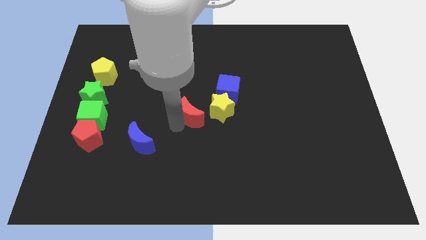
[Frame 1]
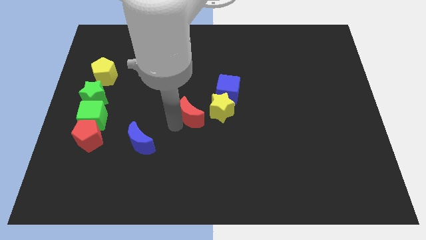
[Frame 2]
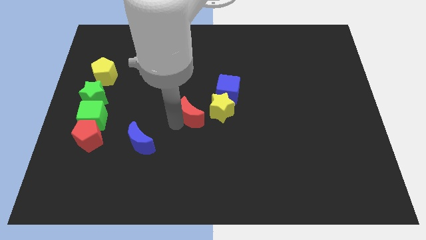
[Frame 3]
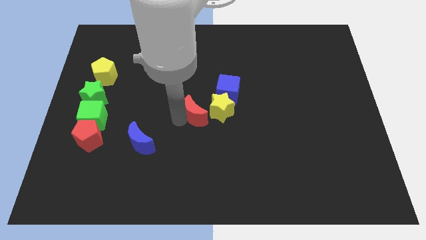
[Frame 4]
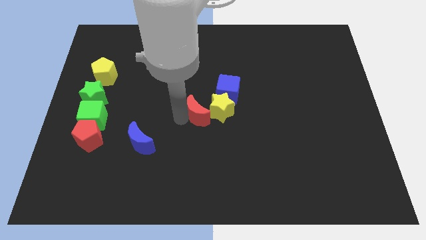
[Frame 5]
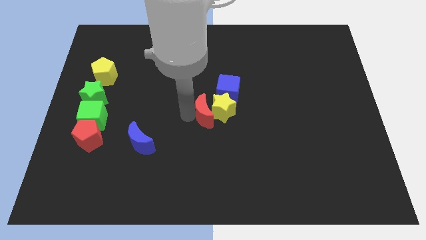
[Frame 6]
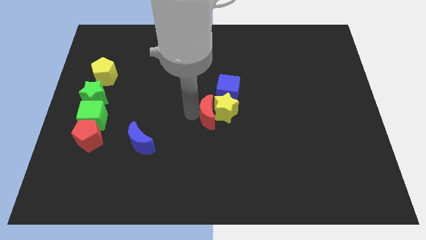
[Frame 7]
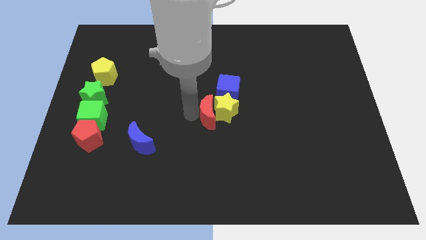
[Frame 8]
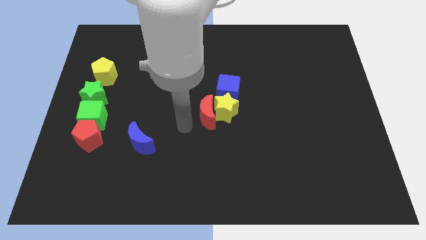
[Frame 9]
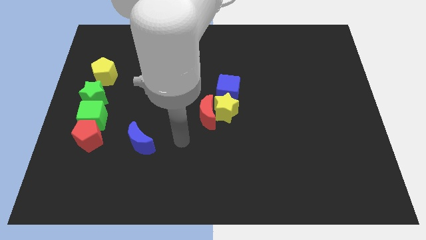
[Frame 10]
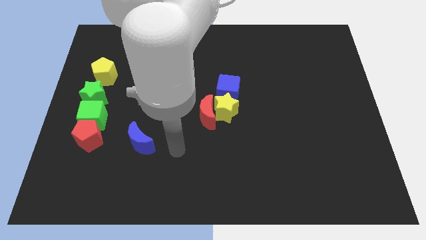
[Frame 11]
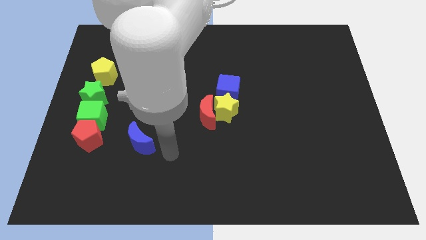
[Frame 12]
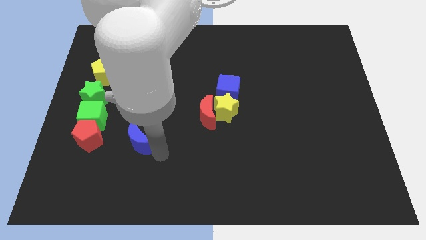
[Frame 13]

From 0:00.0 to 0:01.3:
push red moon into the yellow star

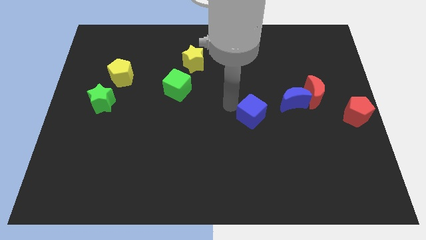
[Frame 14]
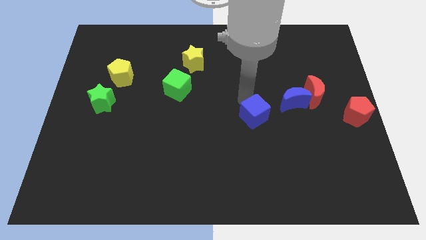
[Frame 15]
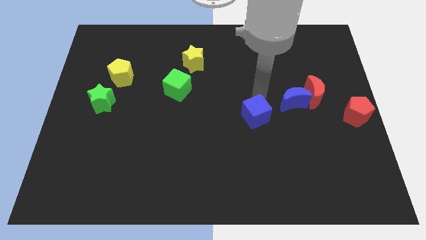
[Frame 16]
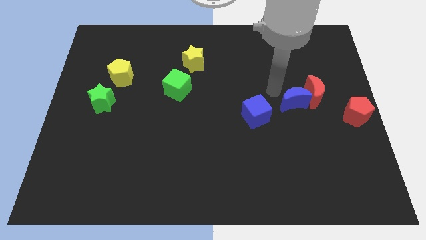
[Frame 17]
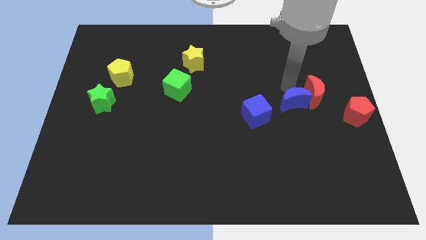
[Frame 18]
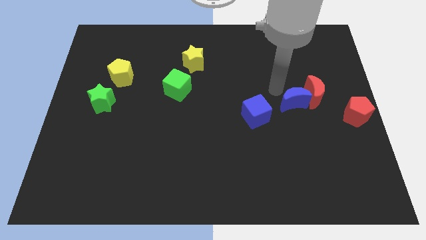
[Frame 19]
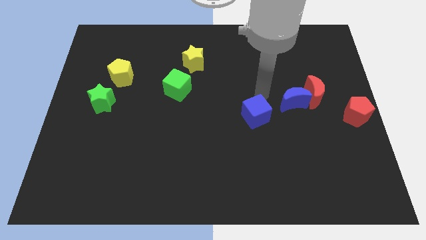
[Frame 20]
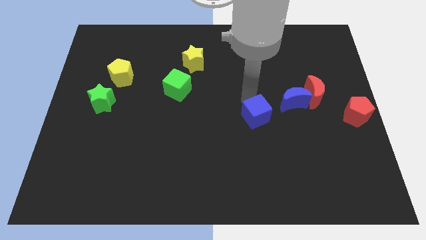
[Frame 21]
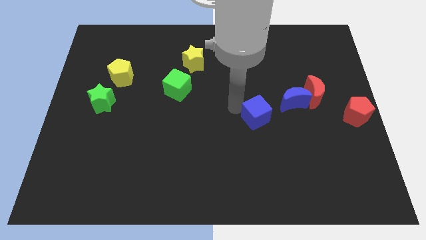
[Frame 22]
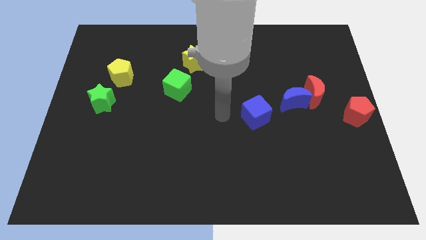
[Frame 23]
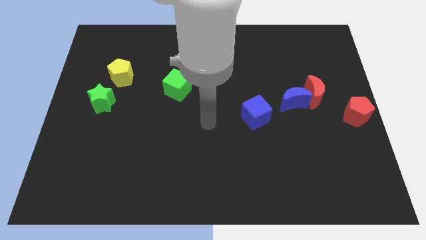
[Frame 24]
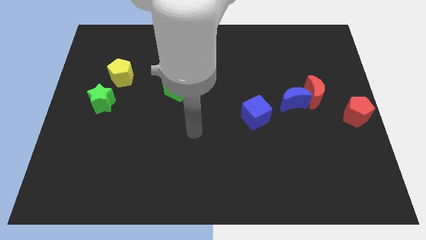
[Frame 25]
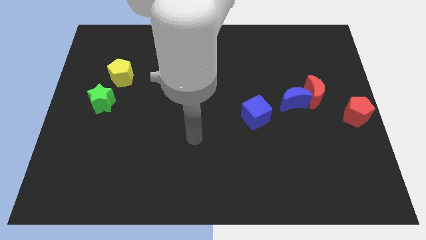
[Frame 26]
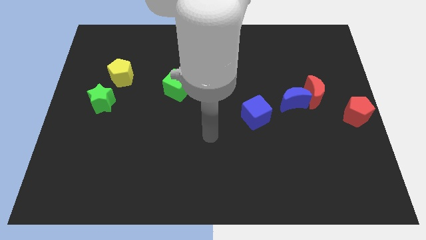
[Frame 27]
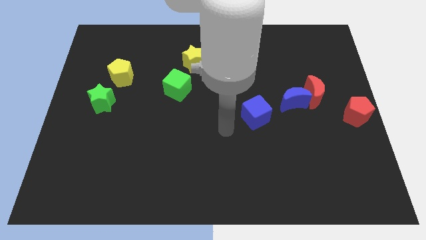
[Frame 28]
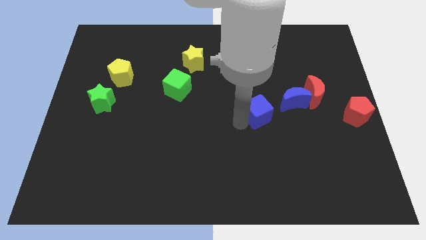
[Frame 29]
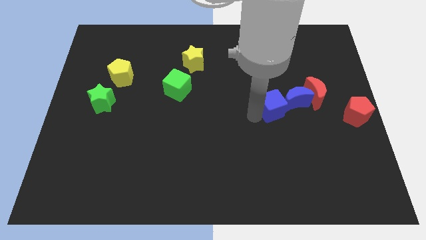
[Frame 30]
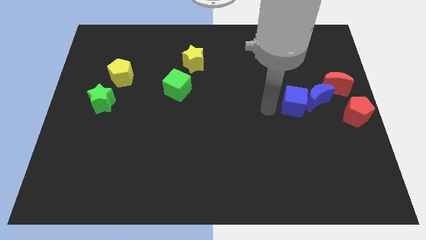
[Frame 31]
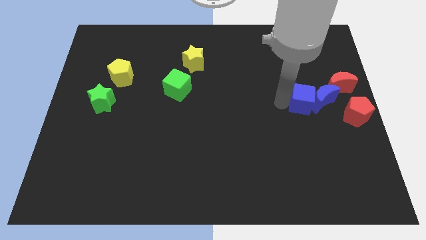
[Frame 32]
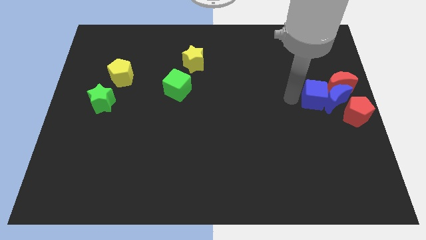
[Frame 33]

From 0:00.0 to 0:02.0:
push the blue blocks into red moon to the left

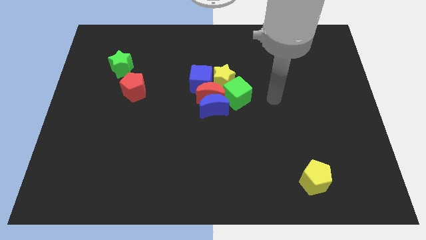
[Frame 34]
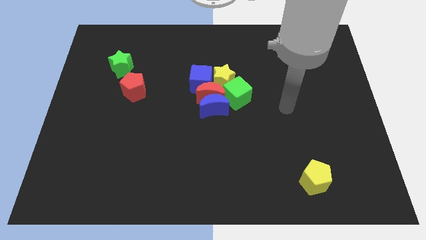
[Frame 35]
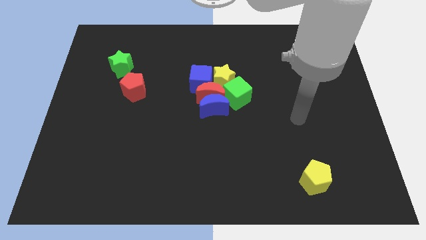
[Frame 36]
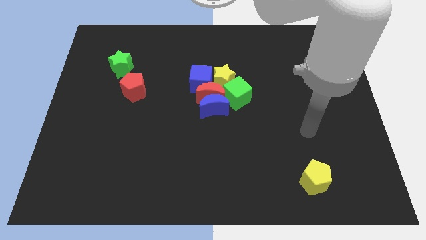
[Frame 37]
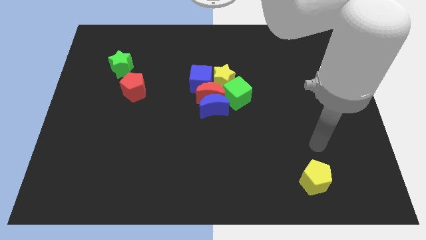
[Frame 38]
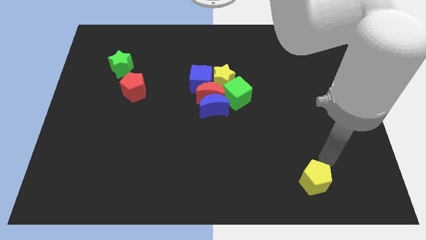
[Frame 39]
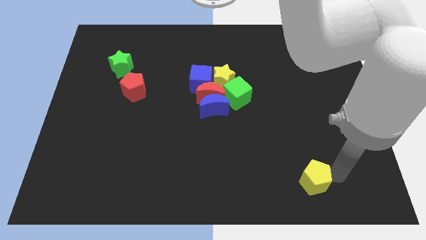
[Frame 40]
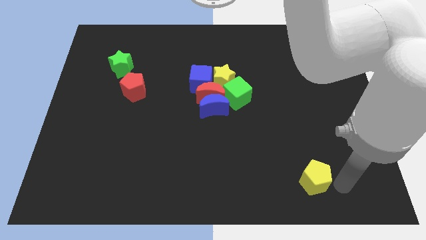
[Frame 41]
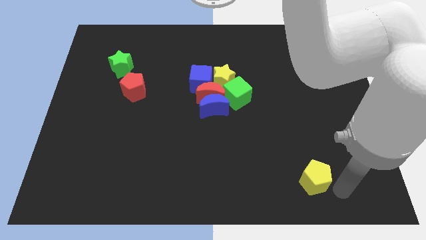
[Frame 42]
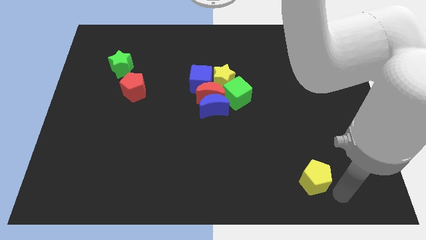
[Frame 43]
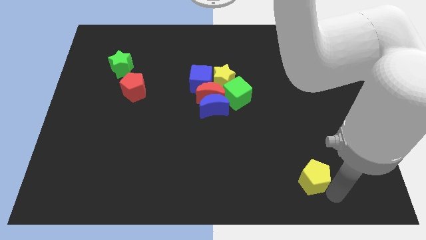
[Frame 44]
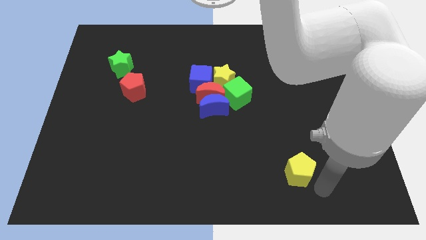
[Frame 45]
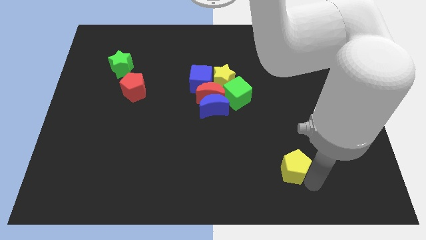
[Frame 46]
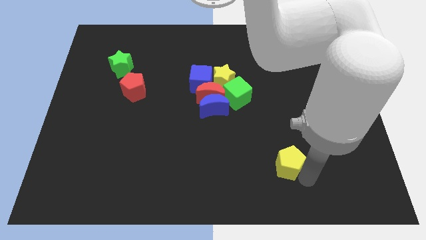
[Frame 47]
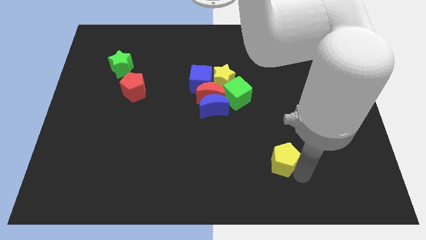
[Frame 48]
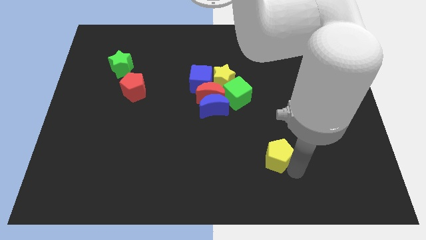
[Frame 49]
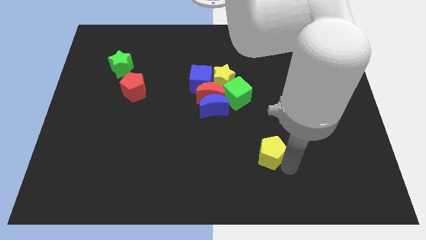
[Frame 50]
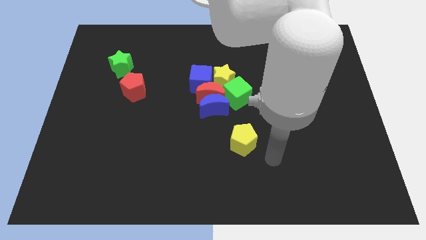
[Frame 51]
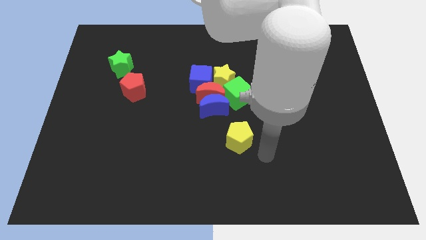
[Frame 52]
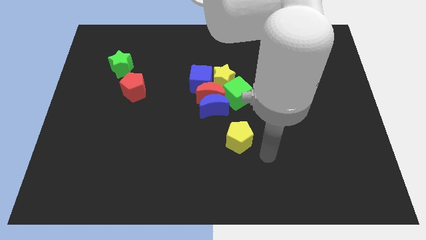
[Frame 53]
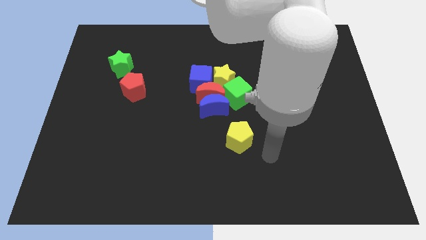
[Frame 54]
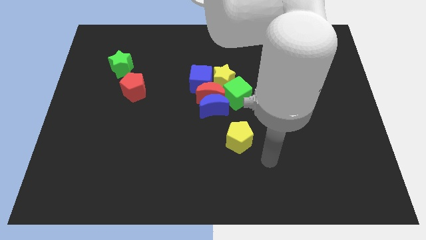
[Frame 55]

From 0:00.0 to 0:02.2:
move yellow pentagon below blue moon

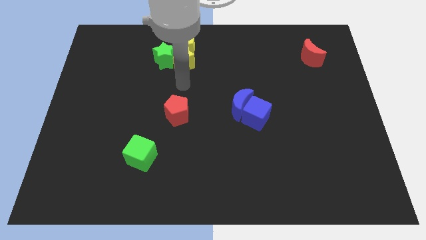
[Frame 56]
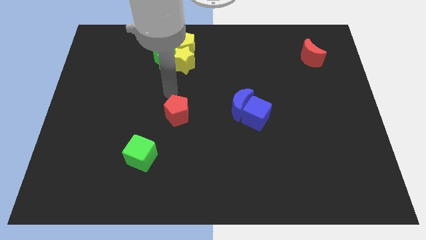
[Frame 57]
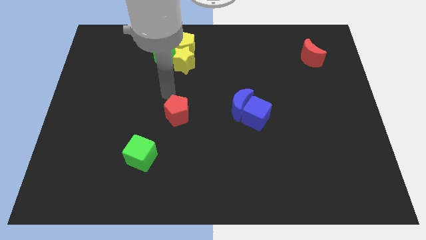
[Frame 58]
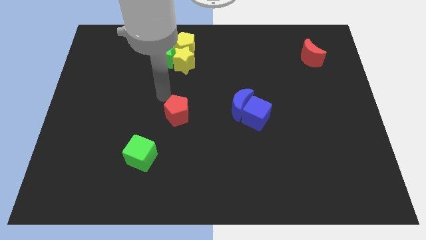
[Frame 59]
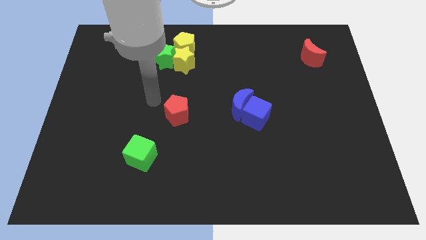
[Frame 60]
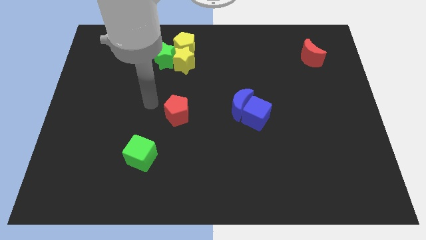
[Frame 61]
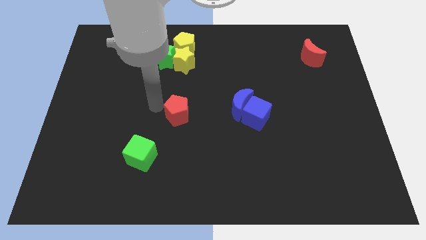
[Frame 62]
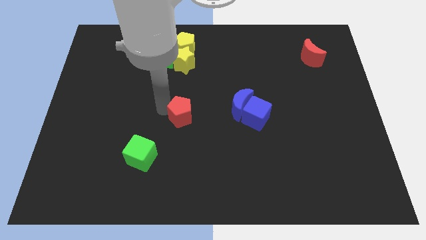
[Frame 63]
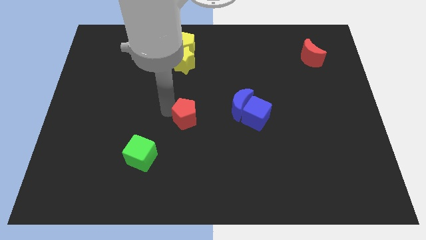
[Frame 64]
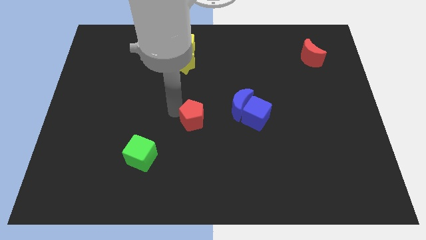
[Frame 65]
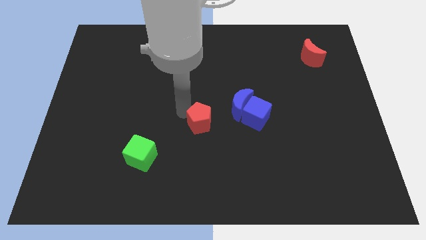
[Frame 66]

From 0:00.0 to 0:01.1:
push the red pentagon to the bottom left of the blue crescent

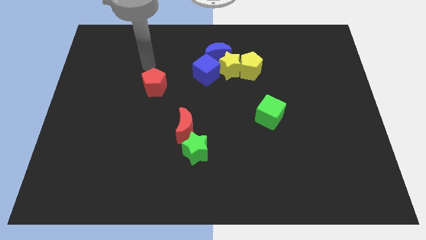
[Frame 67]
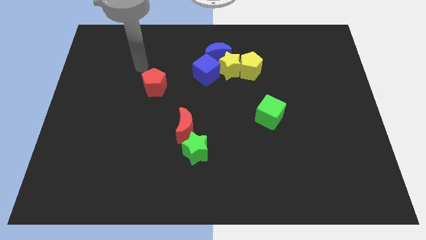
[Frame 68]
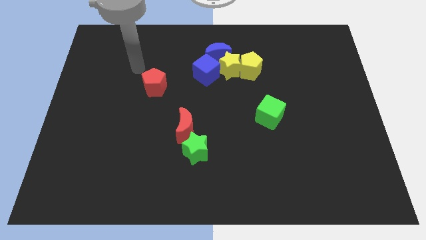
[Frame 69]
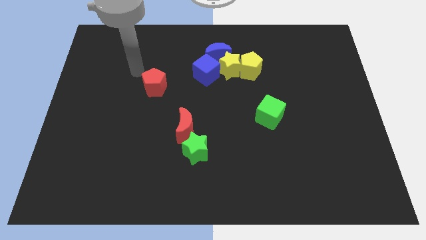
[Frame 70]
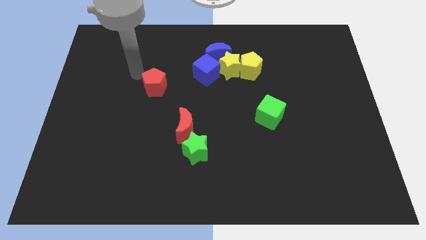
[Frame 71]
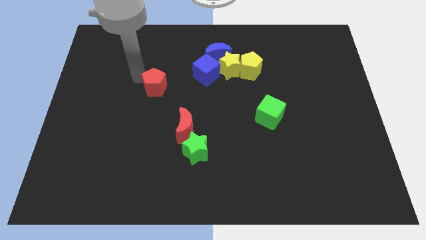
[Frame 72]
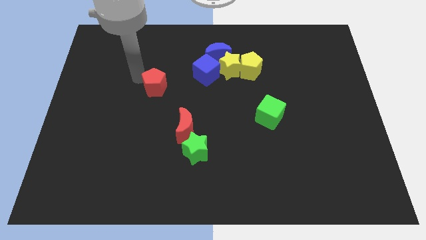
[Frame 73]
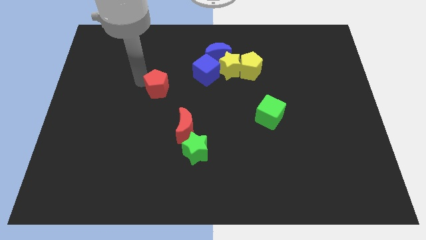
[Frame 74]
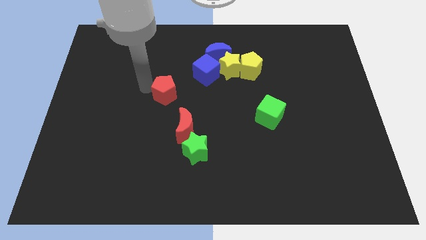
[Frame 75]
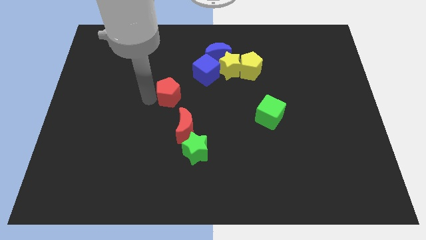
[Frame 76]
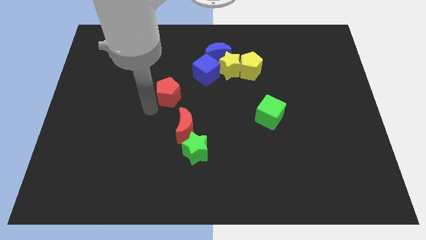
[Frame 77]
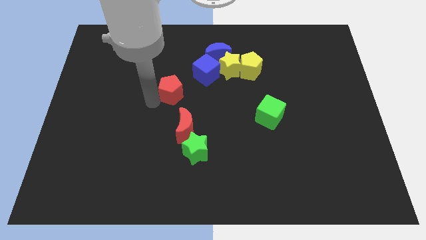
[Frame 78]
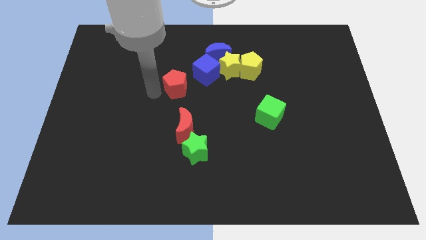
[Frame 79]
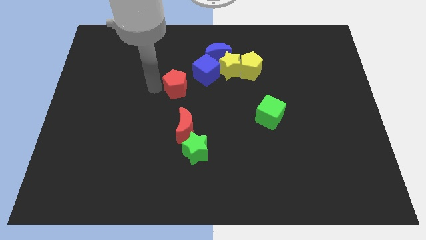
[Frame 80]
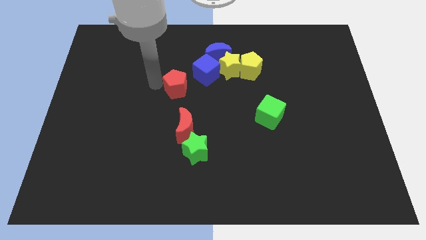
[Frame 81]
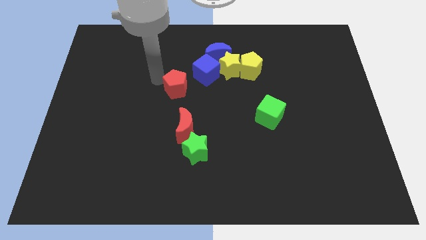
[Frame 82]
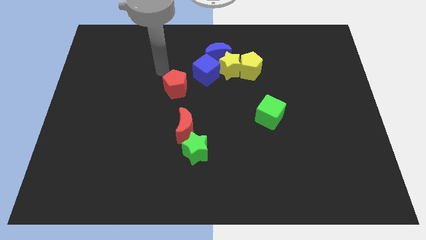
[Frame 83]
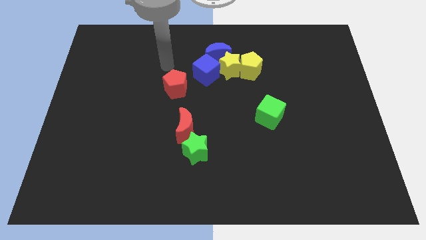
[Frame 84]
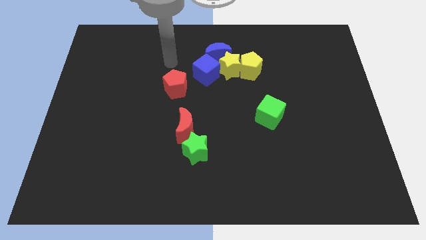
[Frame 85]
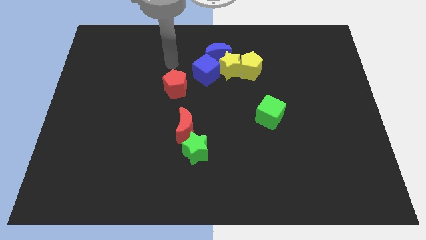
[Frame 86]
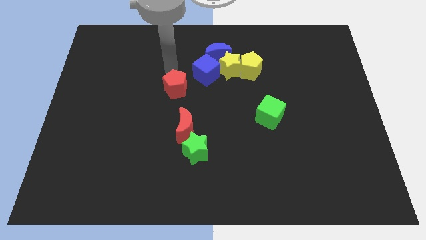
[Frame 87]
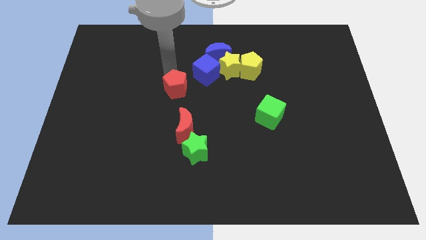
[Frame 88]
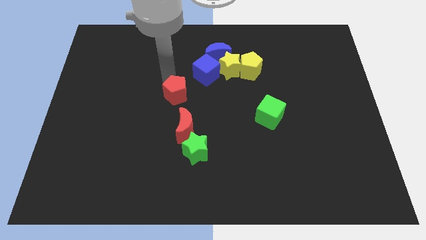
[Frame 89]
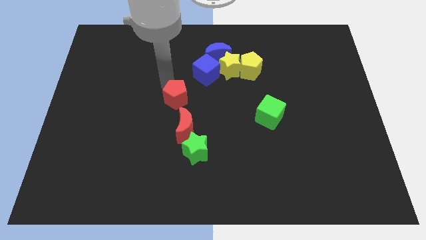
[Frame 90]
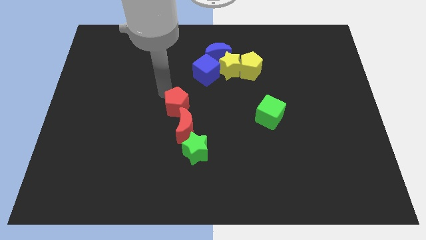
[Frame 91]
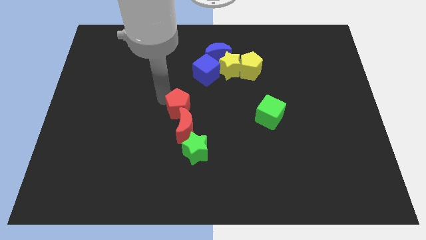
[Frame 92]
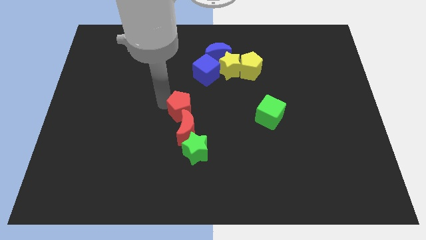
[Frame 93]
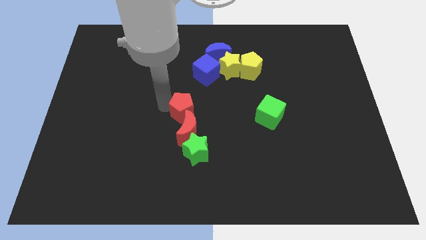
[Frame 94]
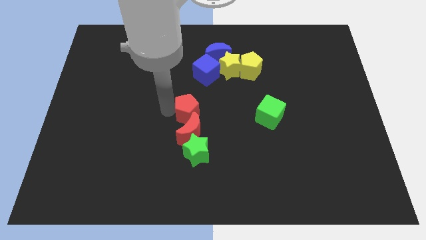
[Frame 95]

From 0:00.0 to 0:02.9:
move the red pentagon above into the red moon
